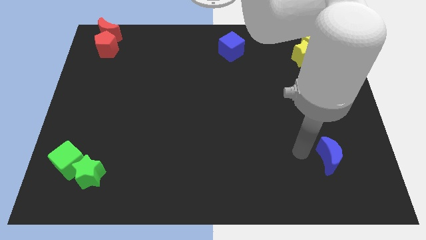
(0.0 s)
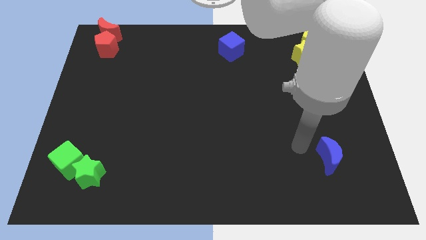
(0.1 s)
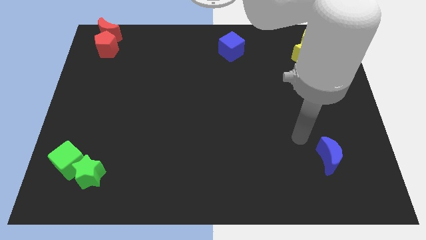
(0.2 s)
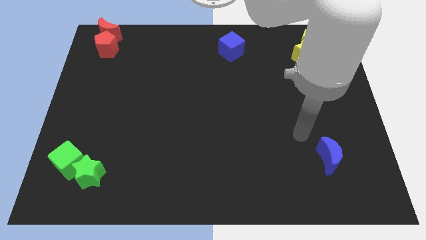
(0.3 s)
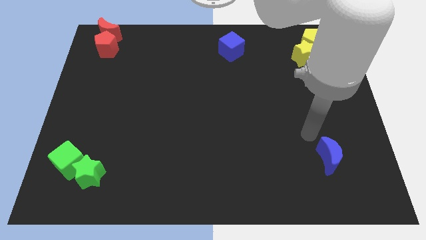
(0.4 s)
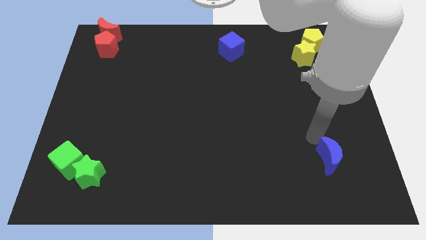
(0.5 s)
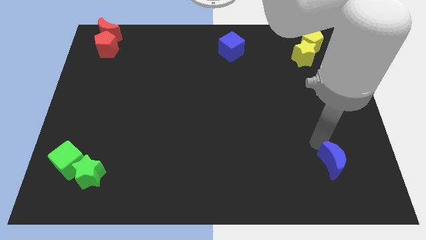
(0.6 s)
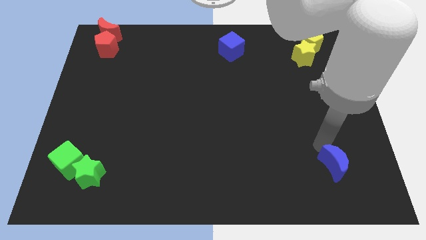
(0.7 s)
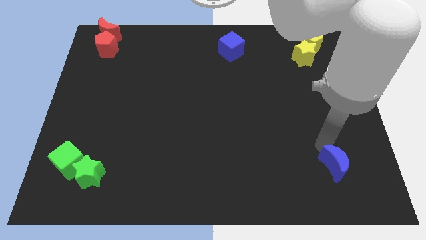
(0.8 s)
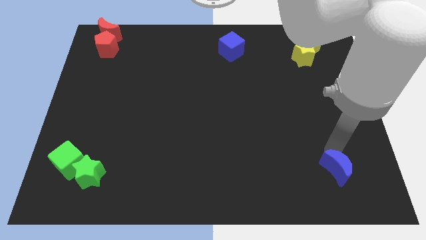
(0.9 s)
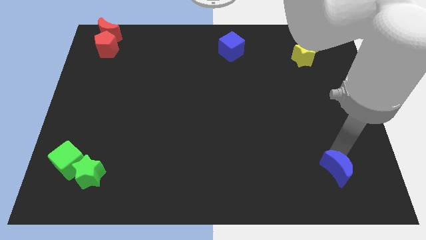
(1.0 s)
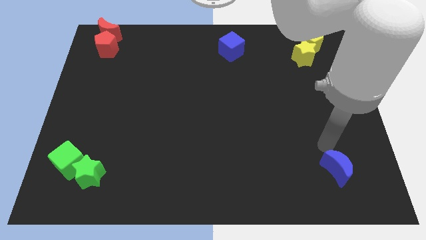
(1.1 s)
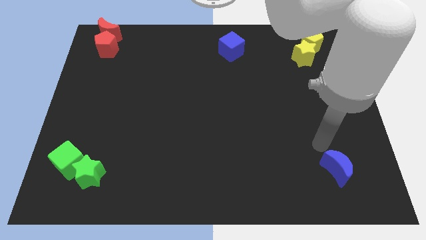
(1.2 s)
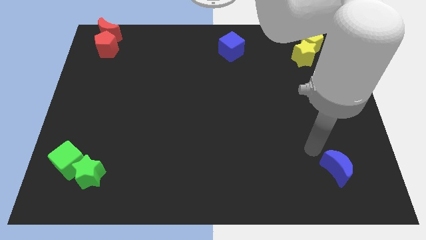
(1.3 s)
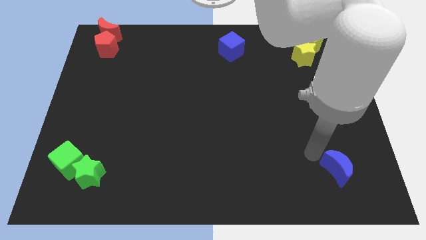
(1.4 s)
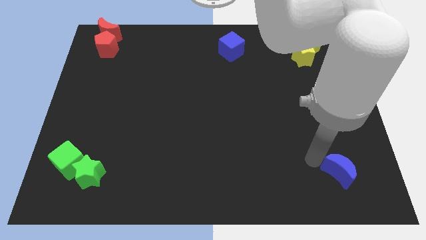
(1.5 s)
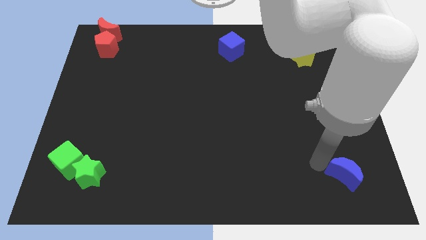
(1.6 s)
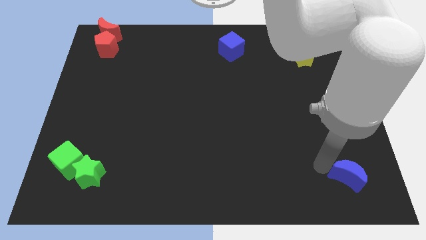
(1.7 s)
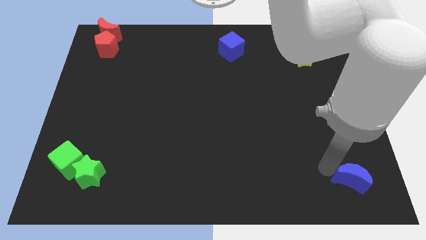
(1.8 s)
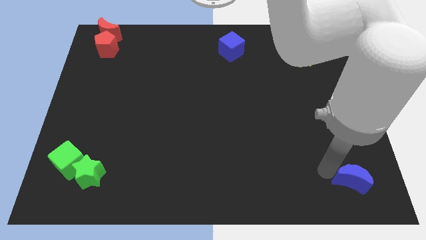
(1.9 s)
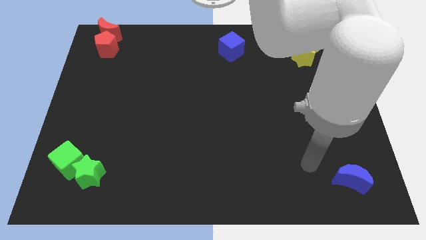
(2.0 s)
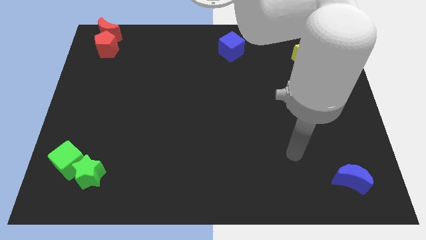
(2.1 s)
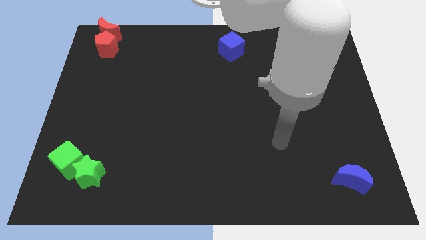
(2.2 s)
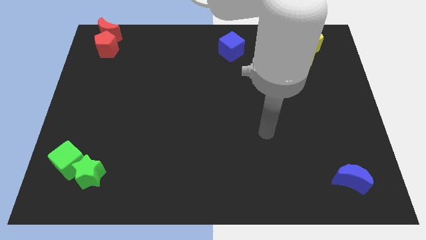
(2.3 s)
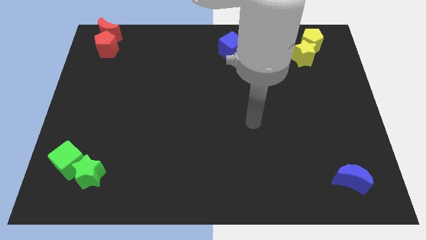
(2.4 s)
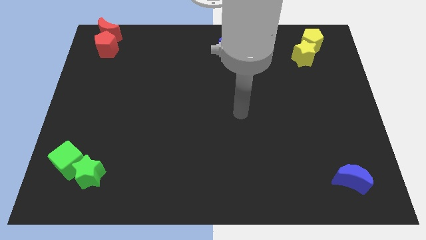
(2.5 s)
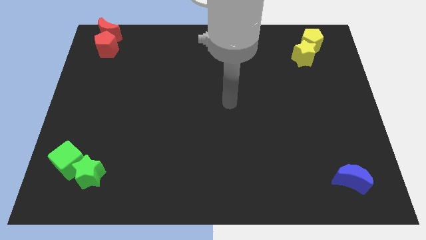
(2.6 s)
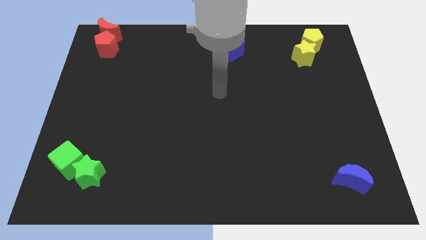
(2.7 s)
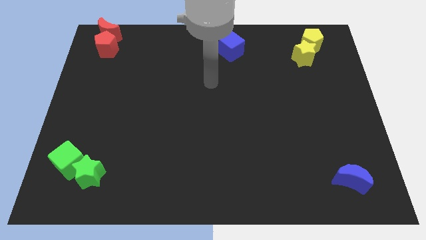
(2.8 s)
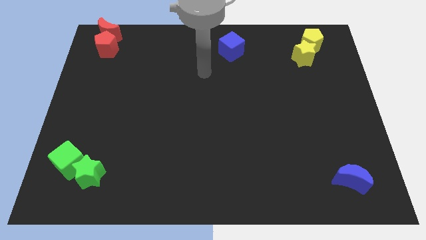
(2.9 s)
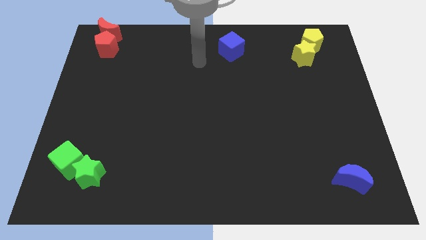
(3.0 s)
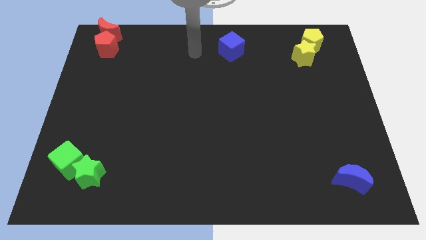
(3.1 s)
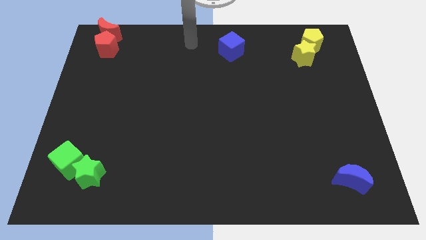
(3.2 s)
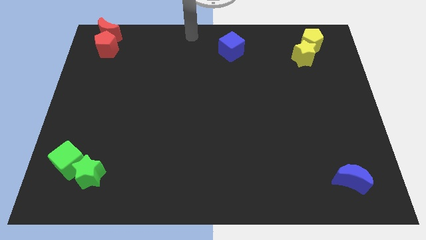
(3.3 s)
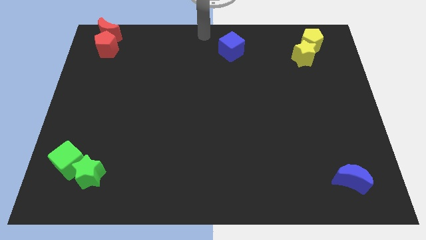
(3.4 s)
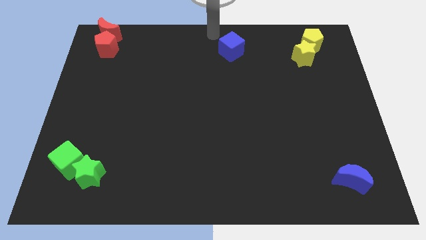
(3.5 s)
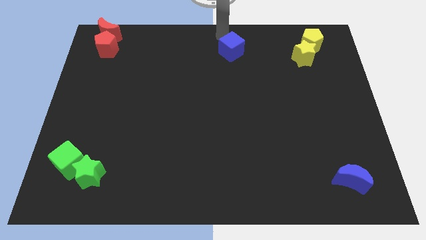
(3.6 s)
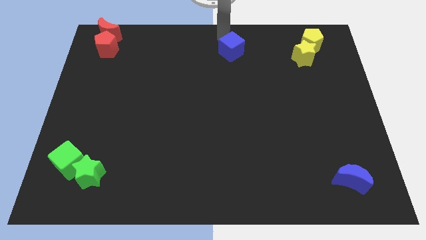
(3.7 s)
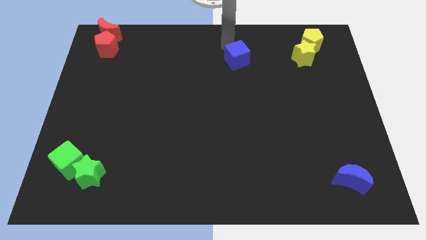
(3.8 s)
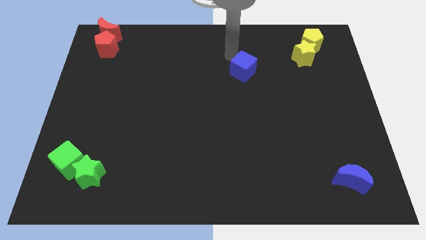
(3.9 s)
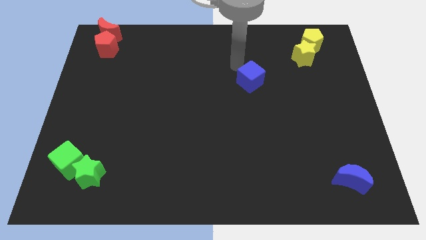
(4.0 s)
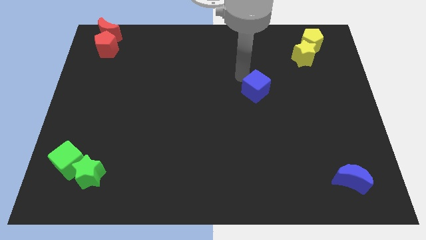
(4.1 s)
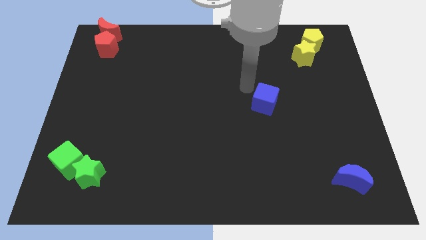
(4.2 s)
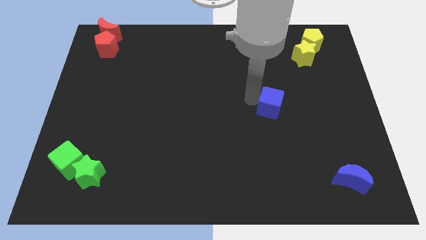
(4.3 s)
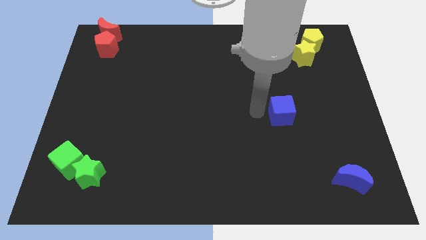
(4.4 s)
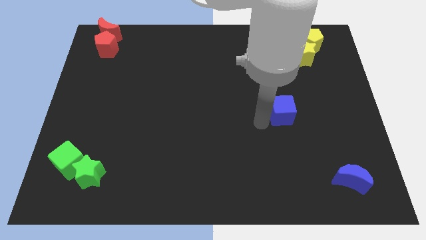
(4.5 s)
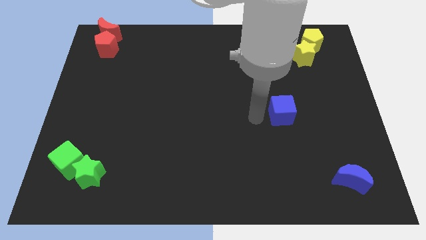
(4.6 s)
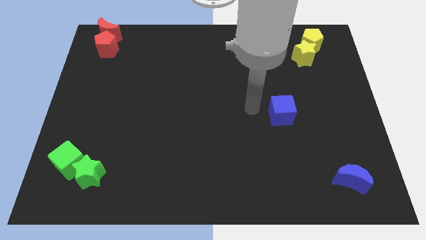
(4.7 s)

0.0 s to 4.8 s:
put the blue cube diagonally to the bottom left of the yellow star

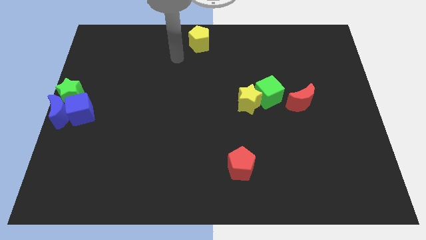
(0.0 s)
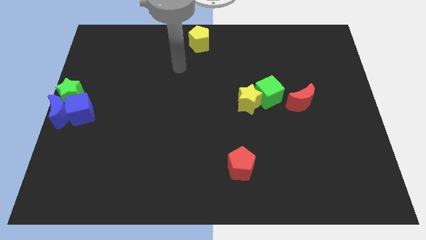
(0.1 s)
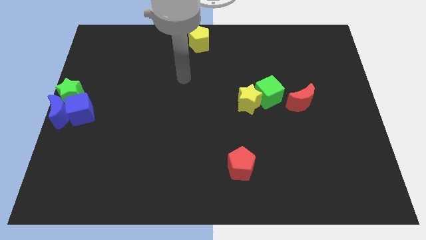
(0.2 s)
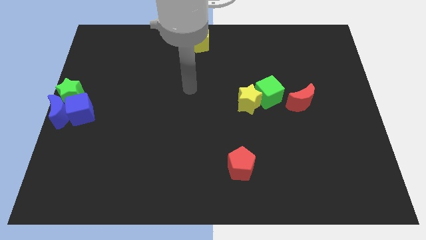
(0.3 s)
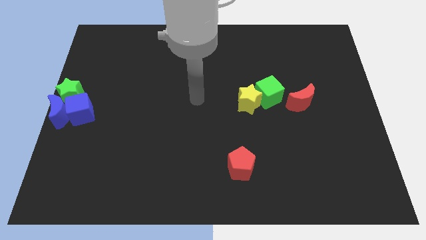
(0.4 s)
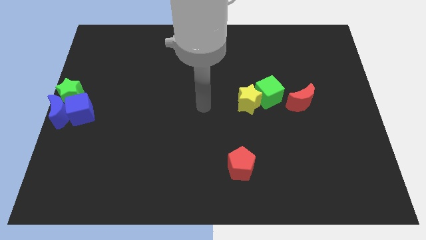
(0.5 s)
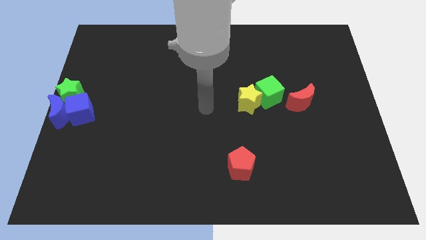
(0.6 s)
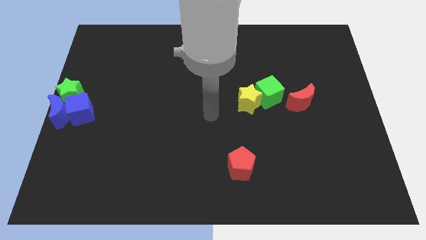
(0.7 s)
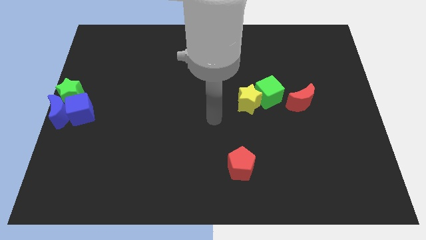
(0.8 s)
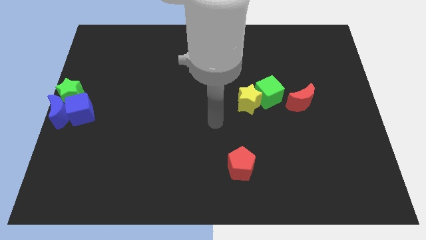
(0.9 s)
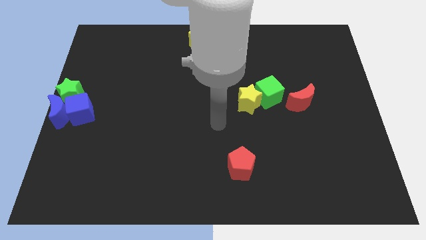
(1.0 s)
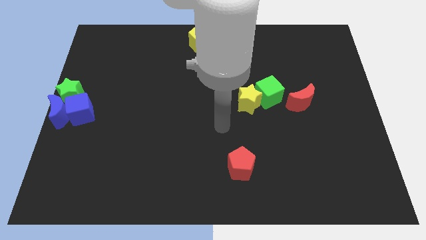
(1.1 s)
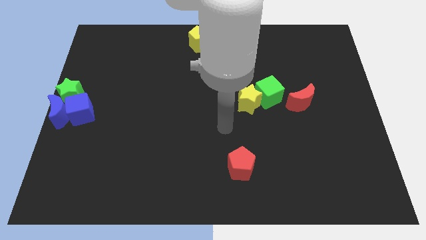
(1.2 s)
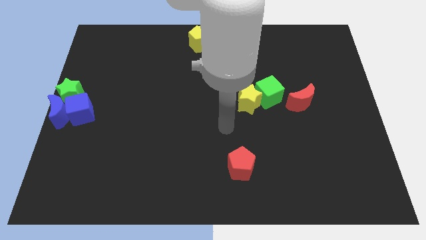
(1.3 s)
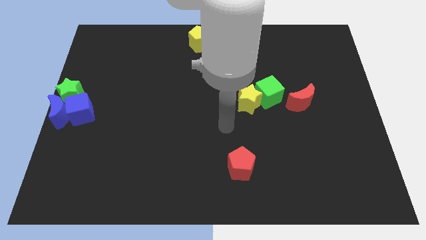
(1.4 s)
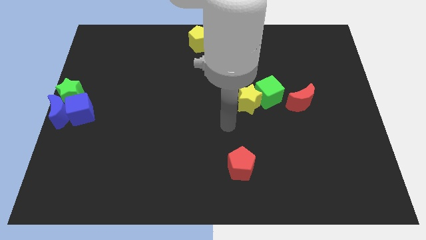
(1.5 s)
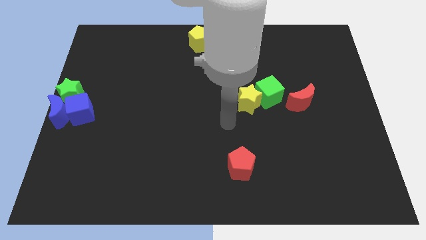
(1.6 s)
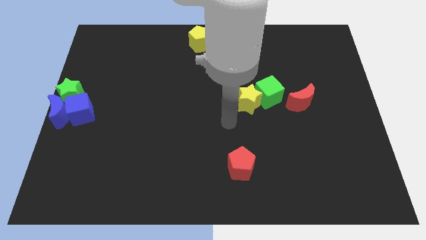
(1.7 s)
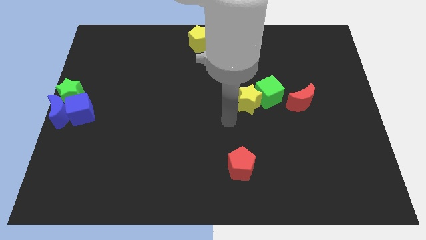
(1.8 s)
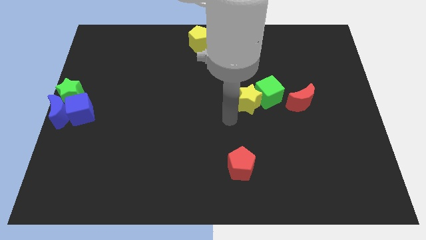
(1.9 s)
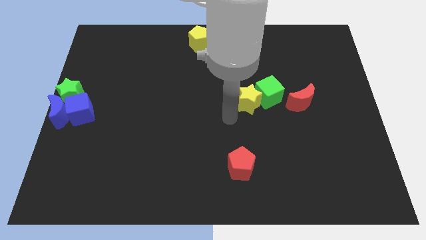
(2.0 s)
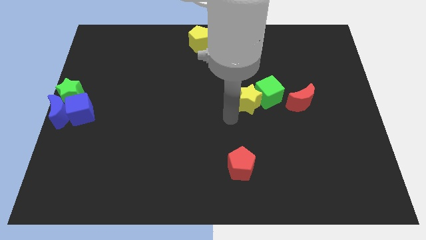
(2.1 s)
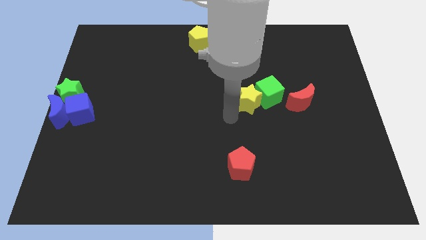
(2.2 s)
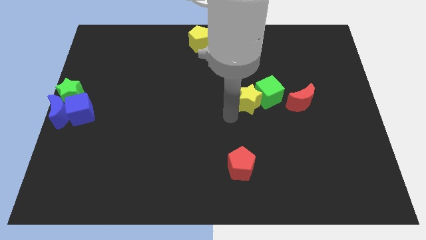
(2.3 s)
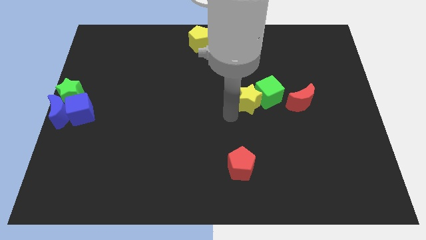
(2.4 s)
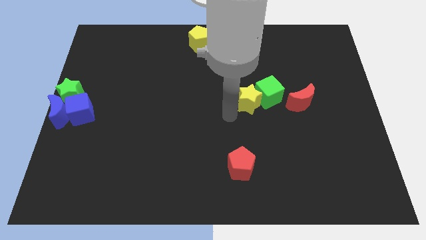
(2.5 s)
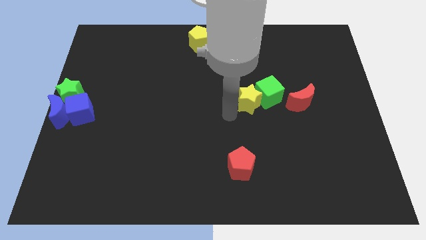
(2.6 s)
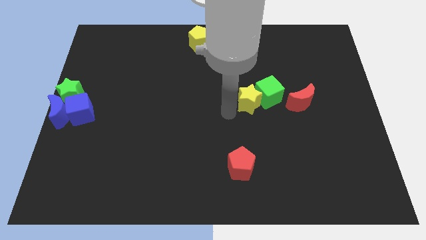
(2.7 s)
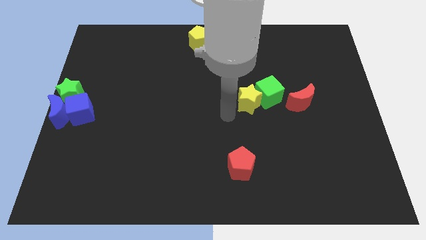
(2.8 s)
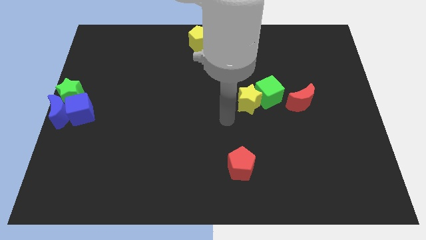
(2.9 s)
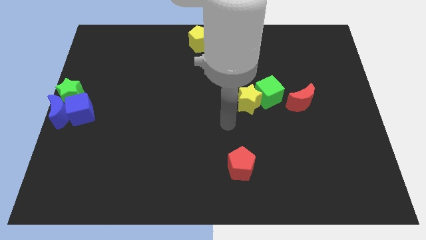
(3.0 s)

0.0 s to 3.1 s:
move your arm away from yellow pentagon

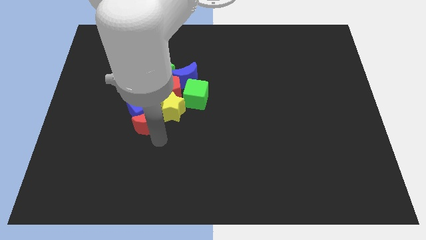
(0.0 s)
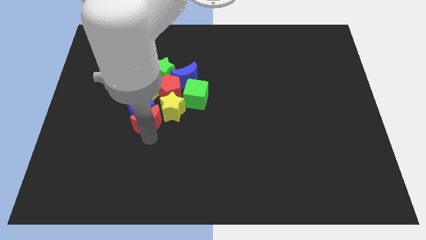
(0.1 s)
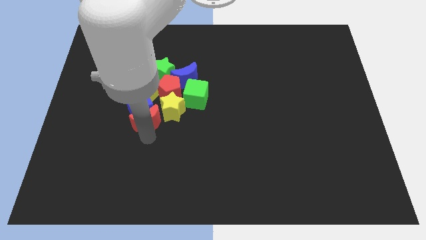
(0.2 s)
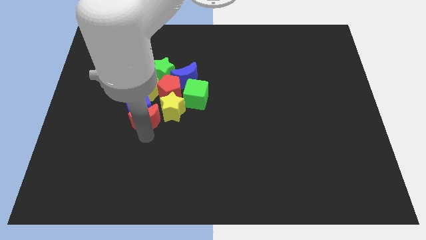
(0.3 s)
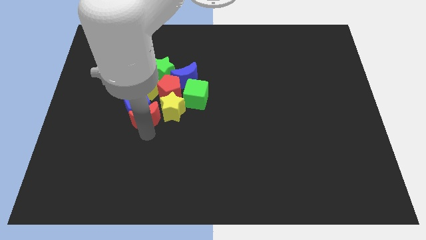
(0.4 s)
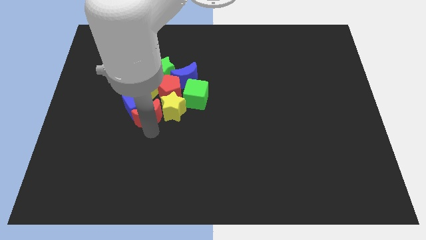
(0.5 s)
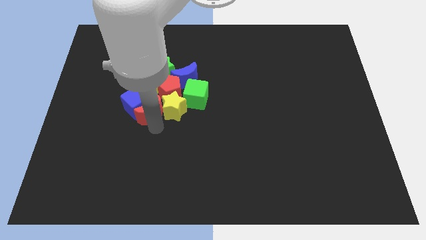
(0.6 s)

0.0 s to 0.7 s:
move the red crescent into the blue block

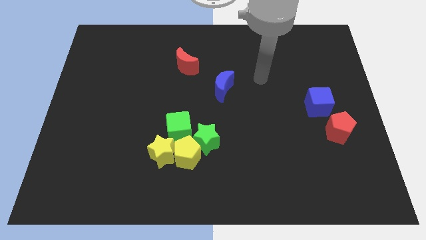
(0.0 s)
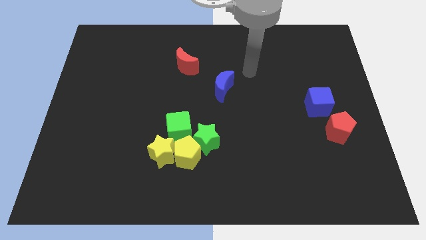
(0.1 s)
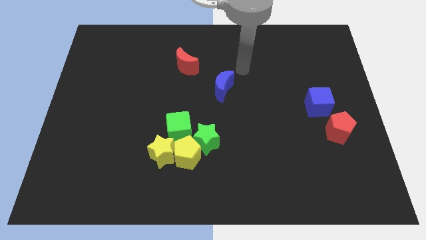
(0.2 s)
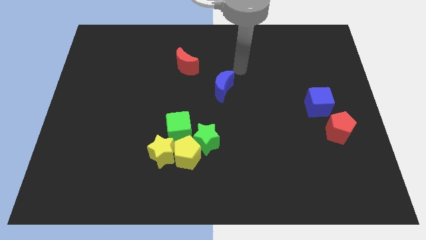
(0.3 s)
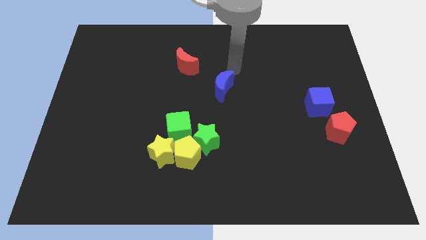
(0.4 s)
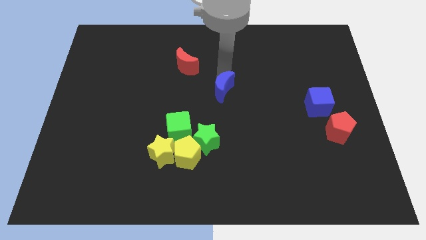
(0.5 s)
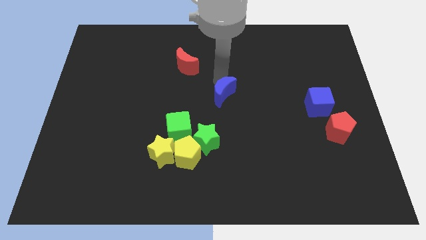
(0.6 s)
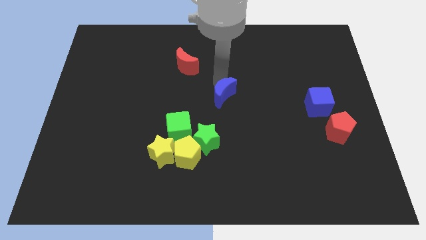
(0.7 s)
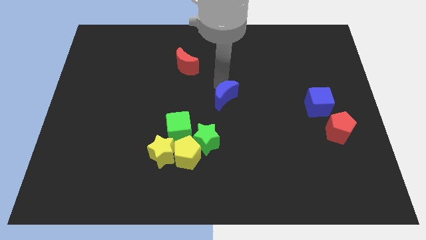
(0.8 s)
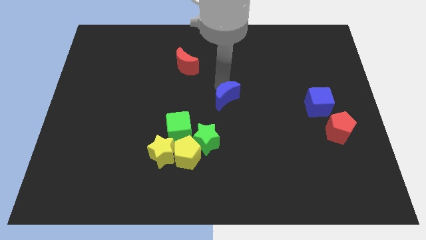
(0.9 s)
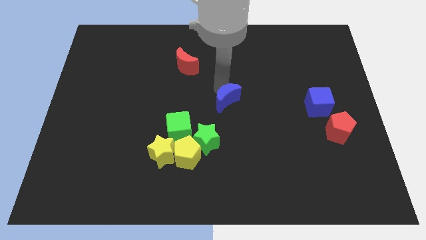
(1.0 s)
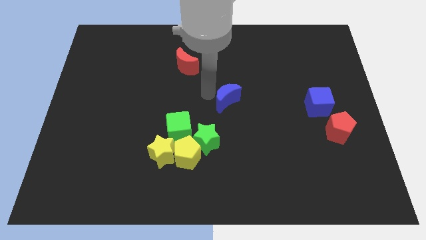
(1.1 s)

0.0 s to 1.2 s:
slightly move the blue cube to the down
